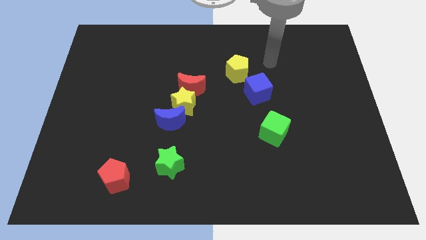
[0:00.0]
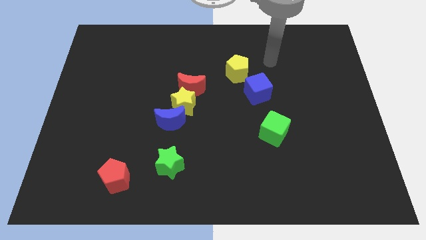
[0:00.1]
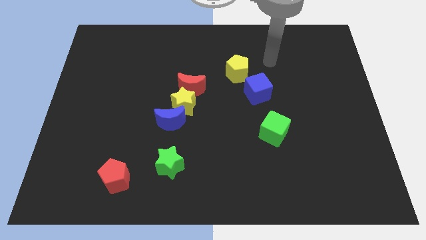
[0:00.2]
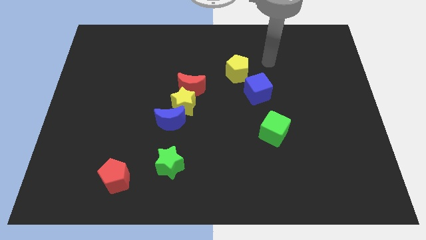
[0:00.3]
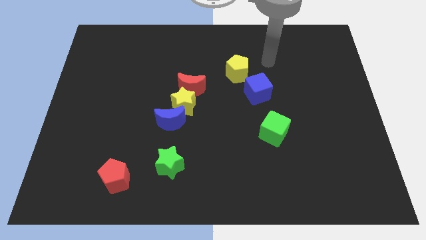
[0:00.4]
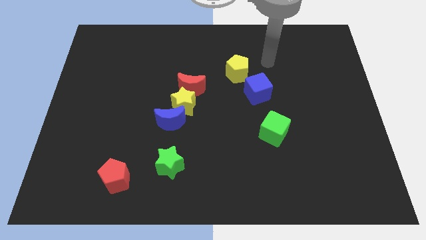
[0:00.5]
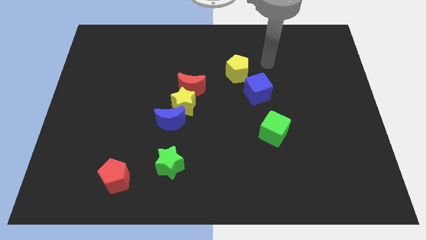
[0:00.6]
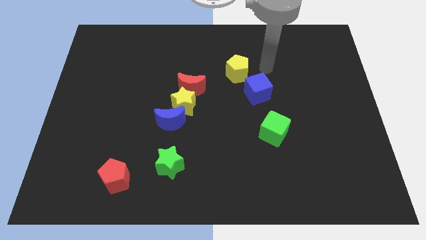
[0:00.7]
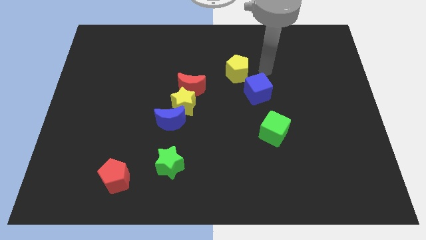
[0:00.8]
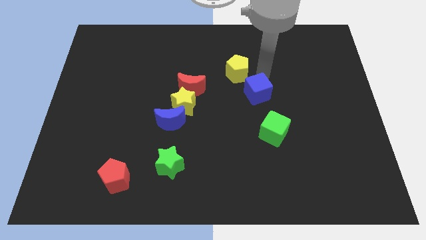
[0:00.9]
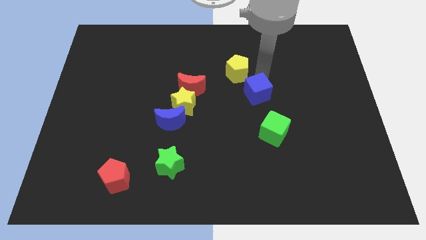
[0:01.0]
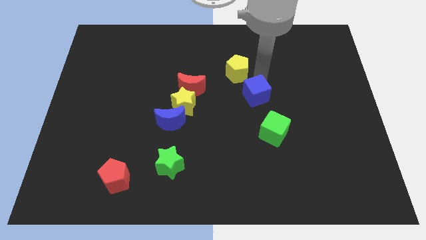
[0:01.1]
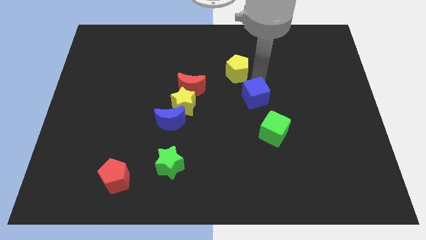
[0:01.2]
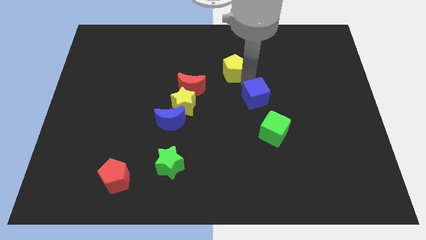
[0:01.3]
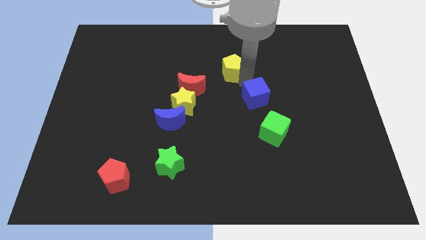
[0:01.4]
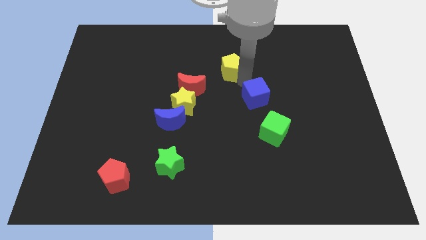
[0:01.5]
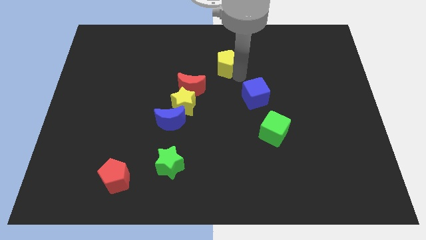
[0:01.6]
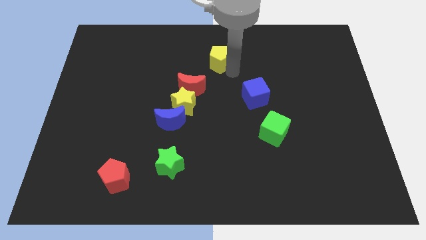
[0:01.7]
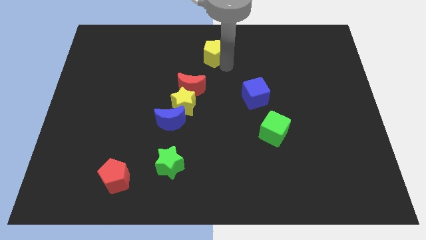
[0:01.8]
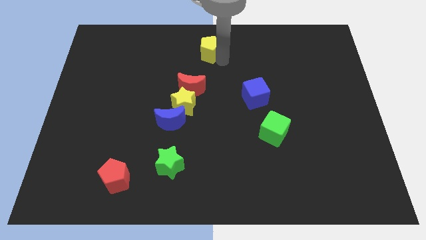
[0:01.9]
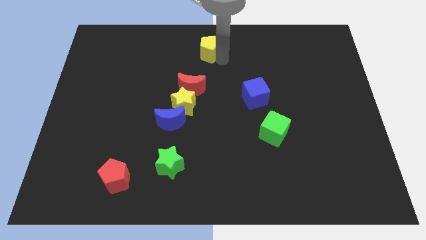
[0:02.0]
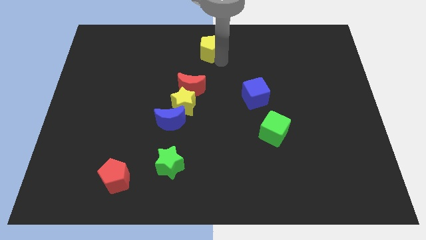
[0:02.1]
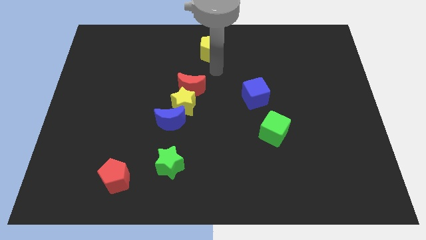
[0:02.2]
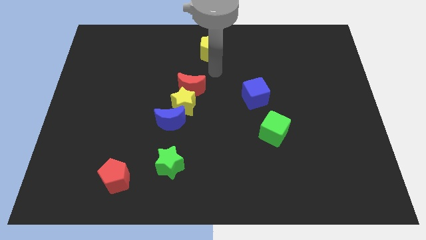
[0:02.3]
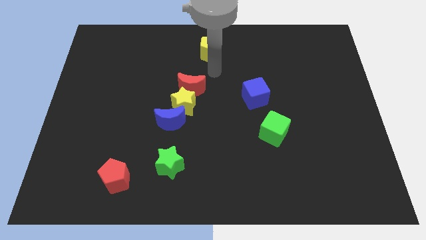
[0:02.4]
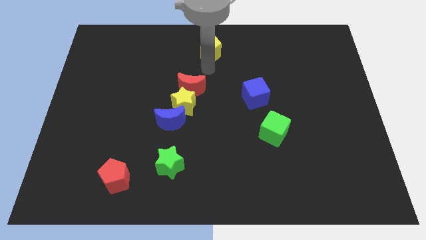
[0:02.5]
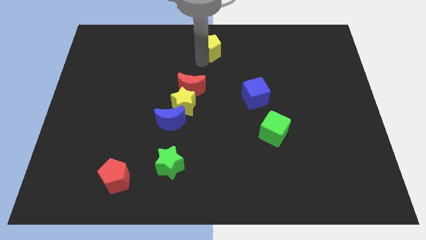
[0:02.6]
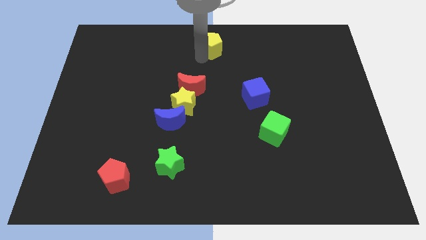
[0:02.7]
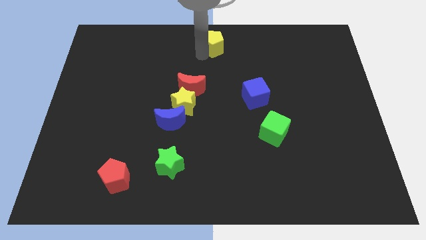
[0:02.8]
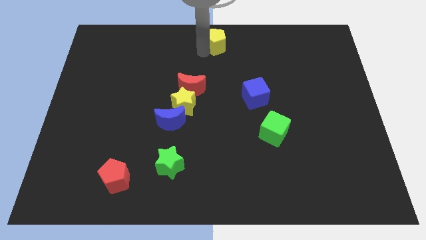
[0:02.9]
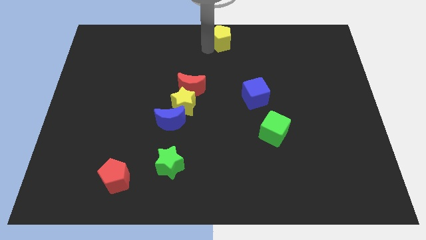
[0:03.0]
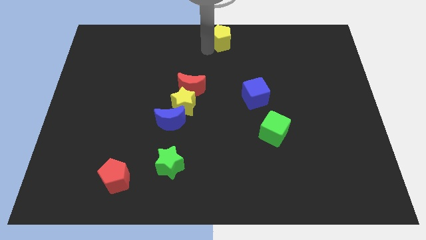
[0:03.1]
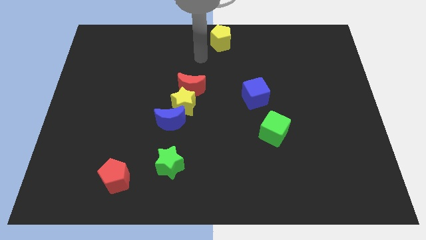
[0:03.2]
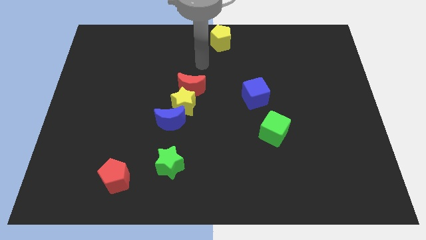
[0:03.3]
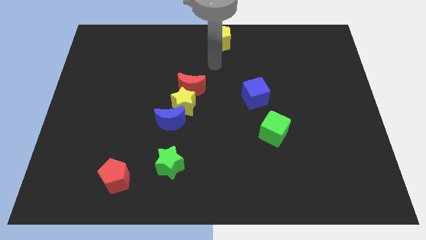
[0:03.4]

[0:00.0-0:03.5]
separate yellow pentagon from the blue cube

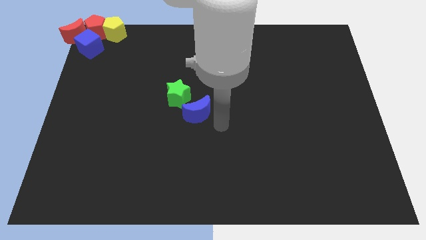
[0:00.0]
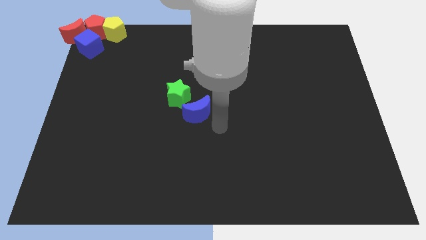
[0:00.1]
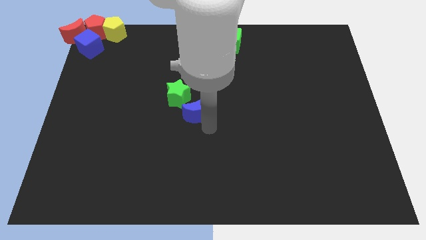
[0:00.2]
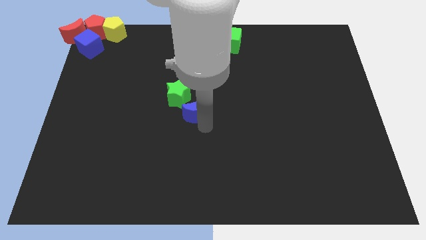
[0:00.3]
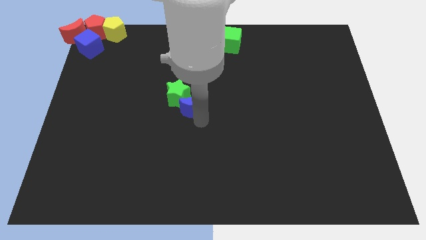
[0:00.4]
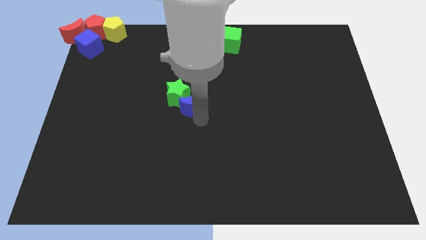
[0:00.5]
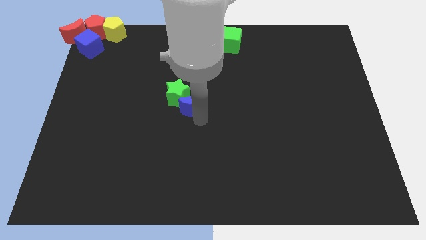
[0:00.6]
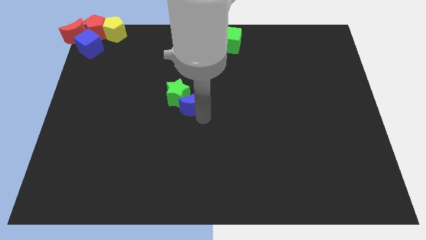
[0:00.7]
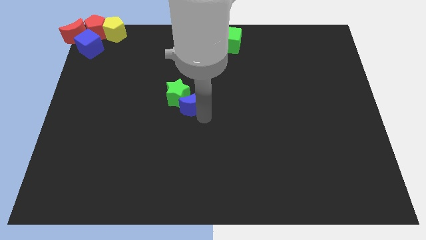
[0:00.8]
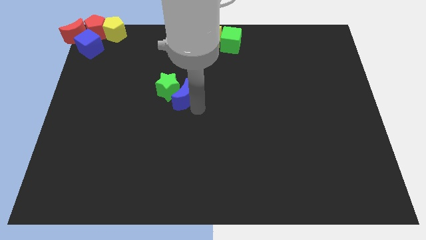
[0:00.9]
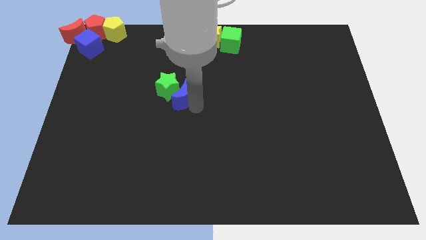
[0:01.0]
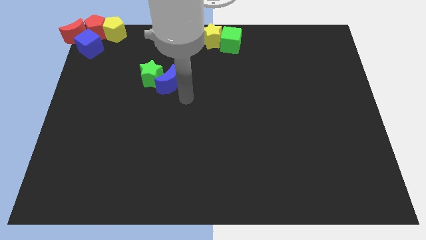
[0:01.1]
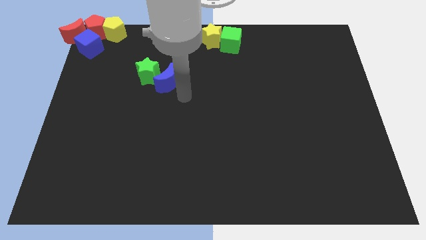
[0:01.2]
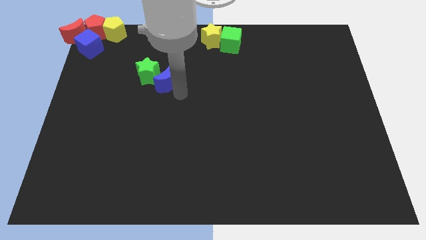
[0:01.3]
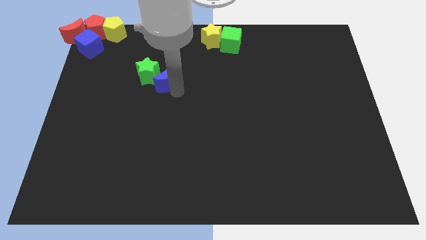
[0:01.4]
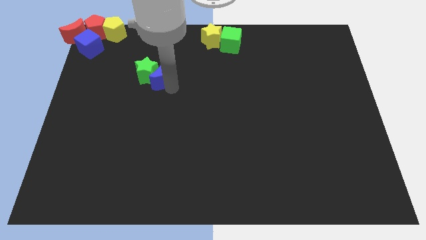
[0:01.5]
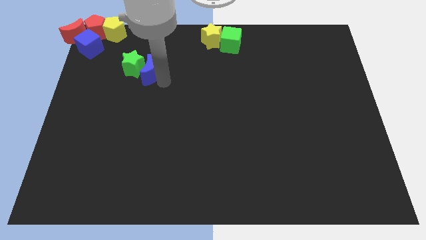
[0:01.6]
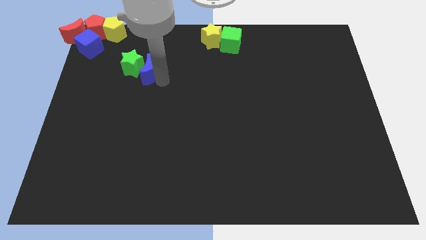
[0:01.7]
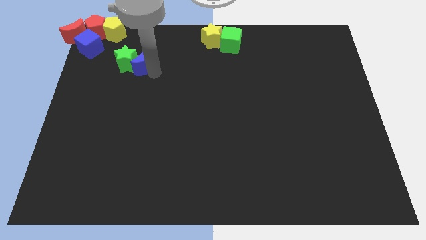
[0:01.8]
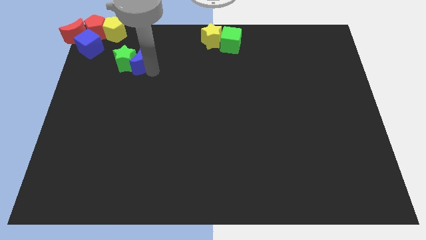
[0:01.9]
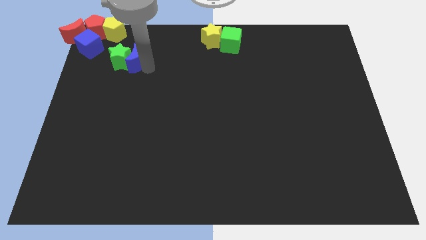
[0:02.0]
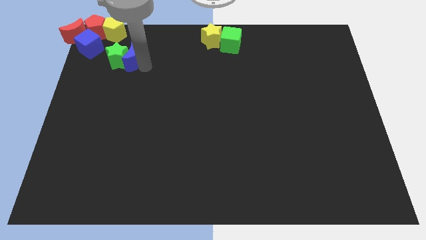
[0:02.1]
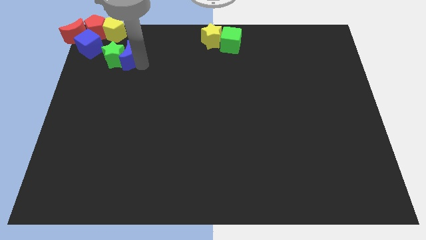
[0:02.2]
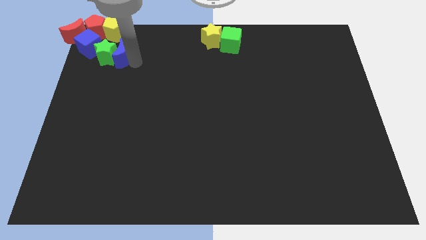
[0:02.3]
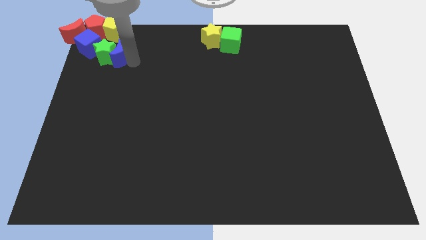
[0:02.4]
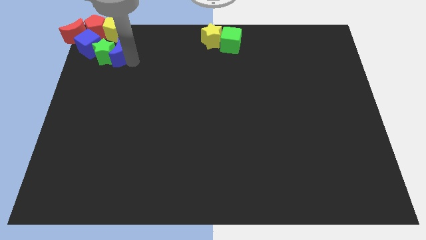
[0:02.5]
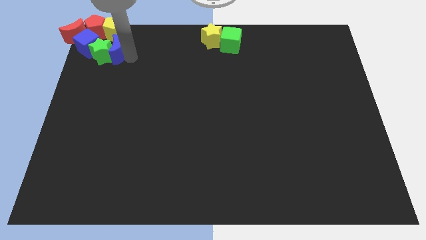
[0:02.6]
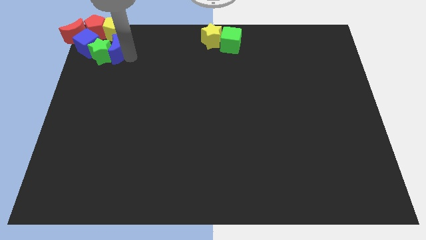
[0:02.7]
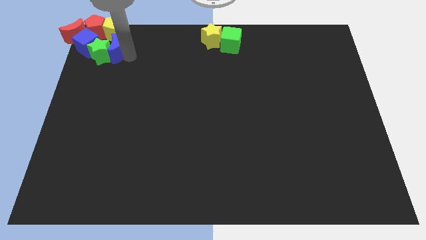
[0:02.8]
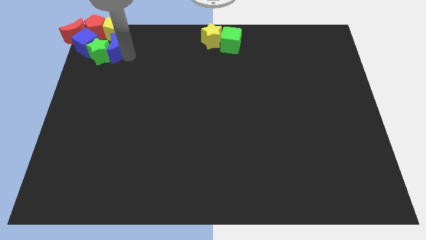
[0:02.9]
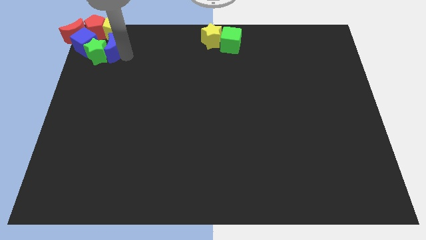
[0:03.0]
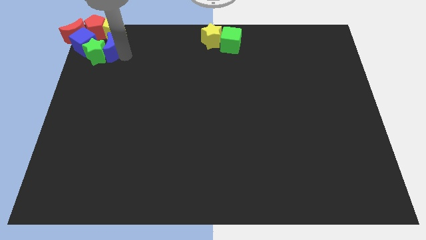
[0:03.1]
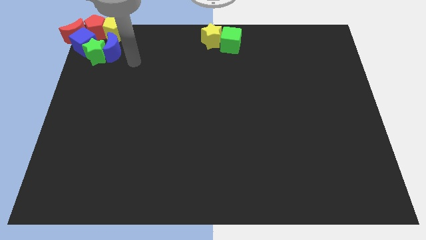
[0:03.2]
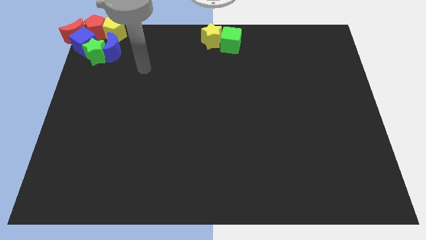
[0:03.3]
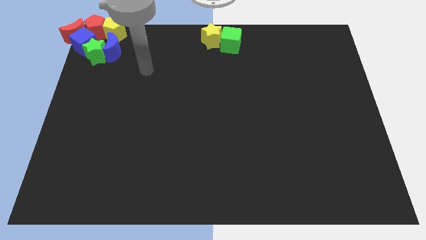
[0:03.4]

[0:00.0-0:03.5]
join the green star and the blue crescent with the group of blocks

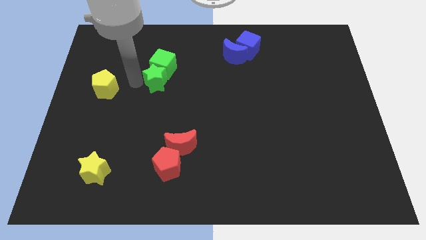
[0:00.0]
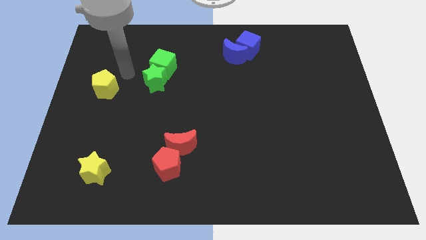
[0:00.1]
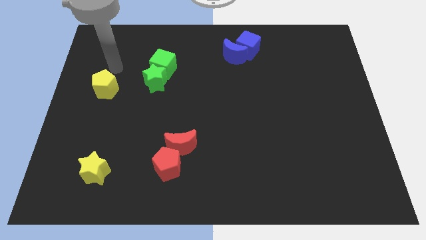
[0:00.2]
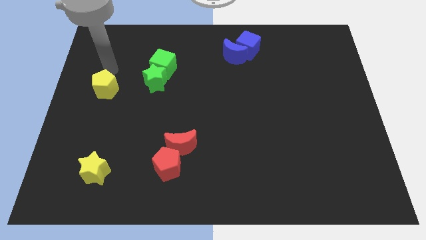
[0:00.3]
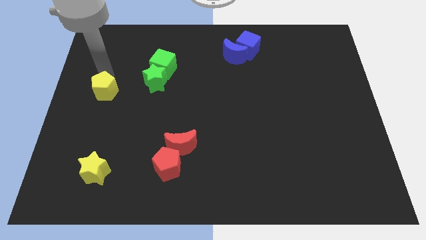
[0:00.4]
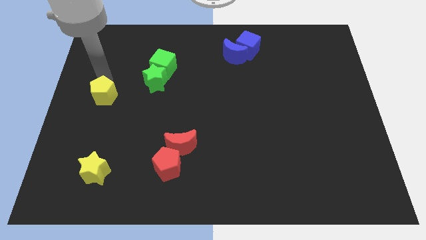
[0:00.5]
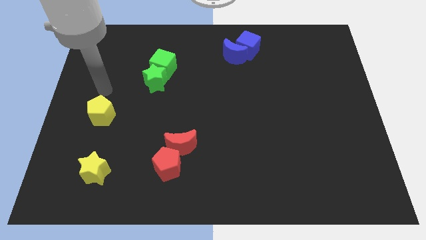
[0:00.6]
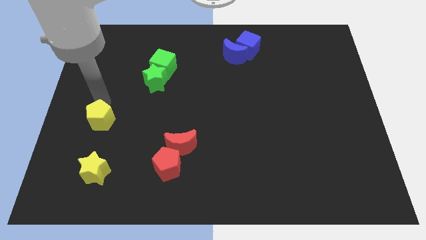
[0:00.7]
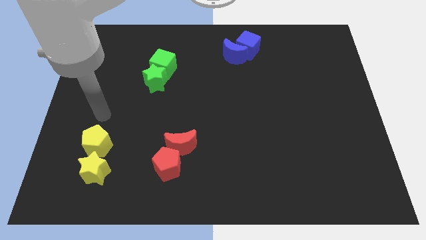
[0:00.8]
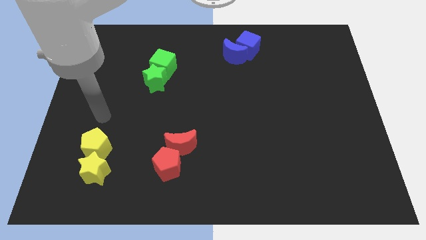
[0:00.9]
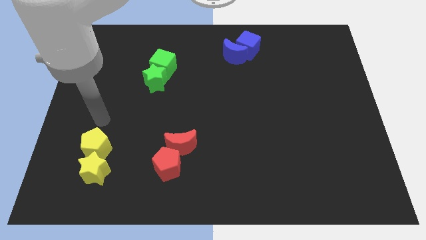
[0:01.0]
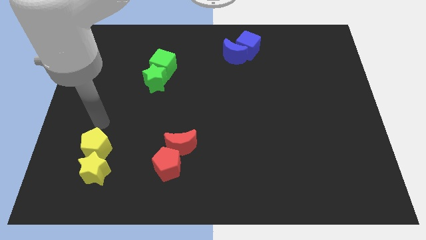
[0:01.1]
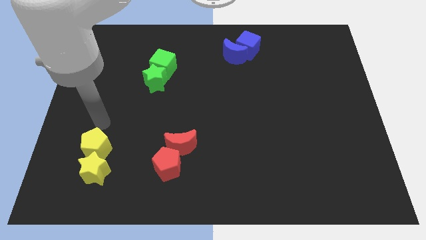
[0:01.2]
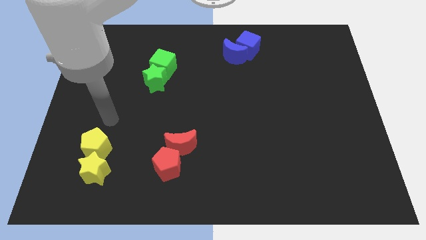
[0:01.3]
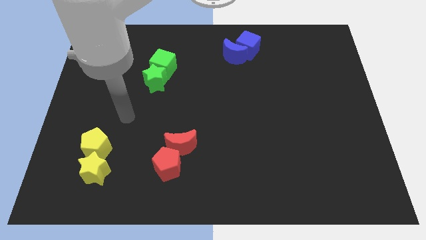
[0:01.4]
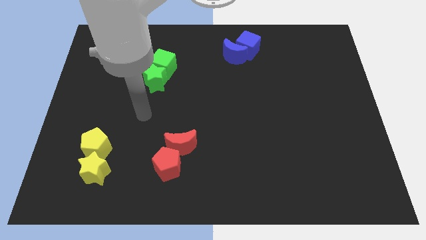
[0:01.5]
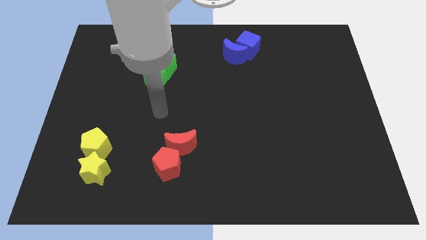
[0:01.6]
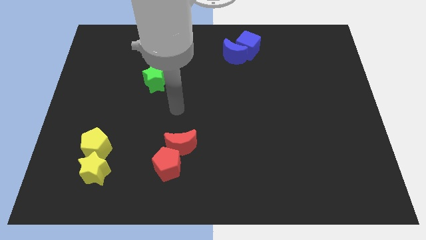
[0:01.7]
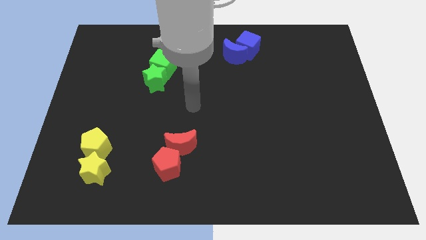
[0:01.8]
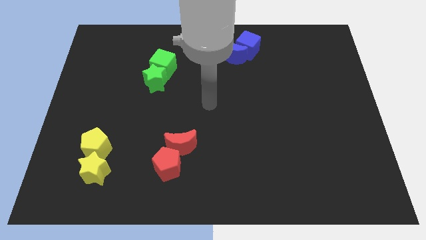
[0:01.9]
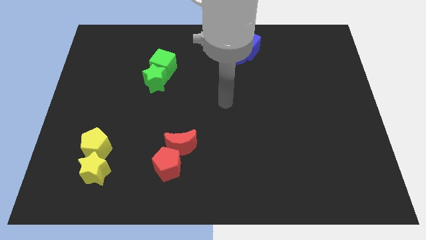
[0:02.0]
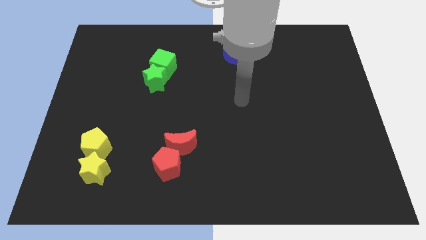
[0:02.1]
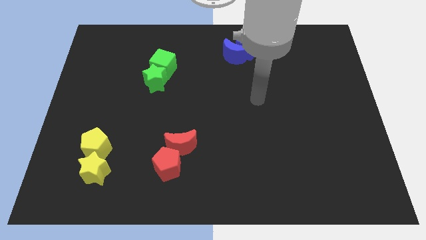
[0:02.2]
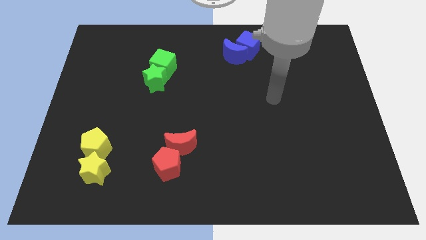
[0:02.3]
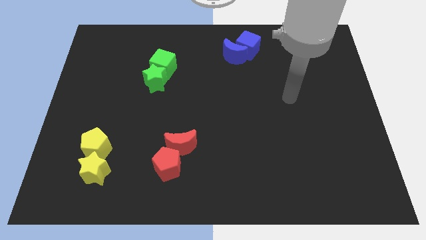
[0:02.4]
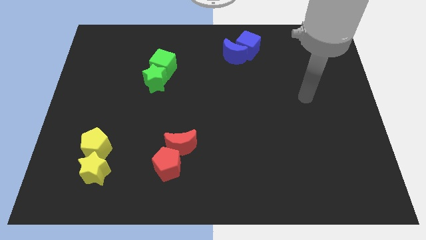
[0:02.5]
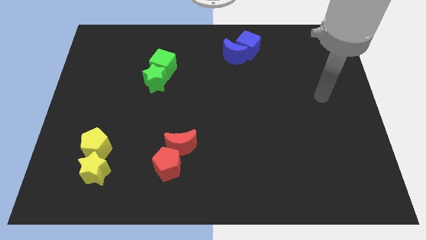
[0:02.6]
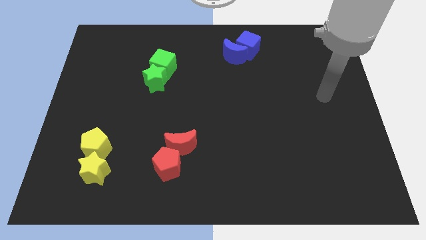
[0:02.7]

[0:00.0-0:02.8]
move the arm away from the yellow pentagon
